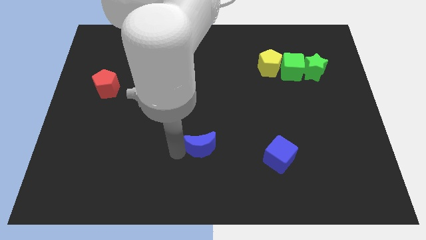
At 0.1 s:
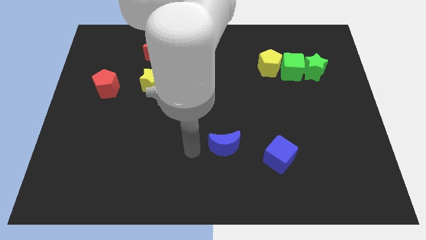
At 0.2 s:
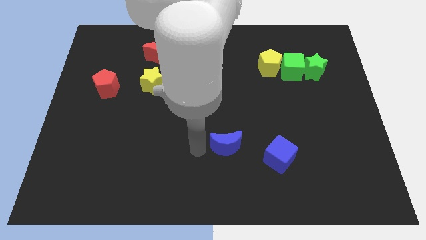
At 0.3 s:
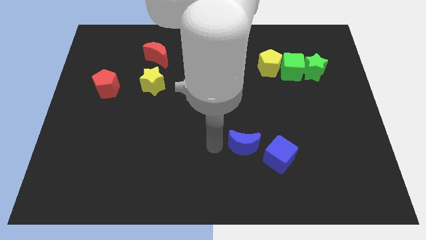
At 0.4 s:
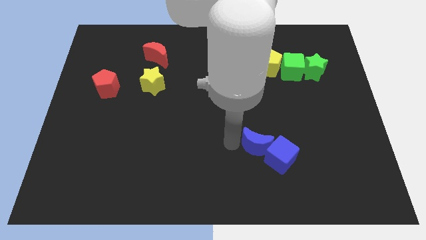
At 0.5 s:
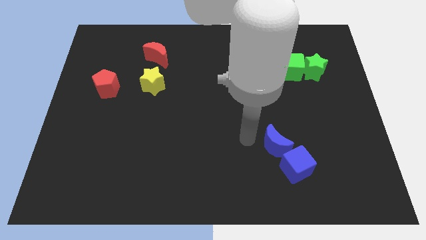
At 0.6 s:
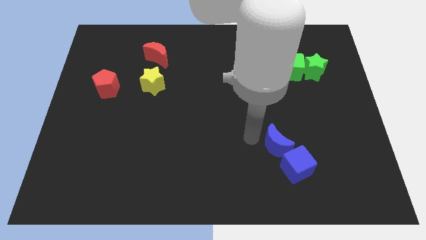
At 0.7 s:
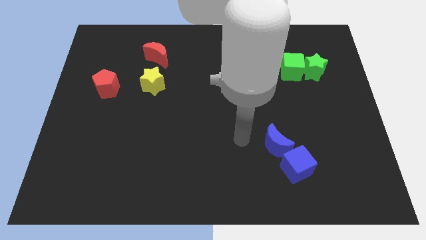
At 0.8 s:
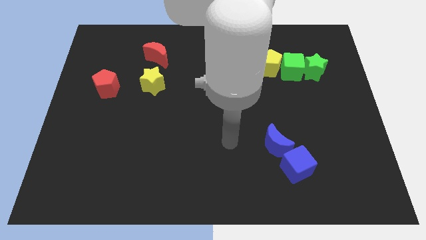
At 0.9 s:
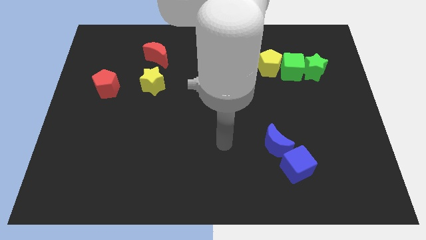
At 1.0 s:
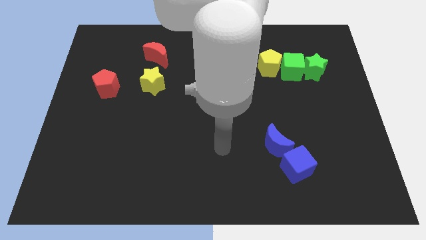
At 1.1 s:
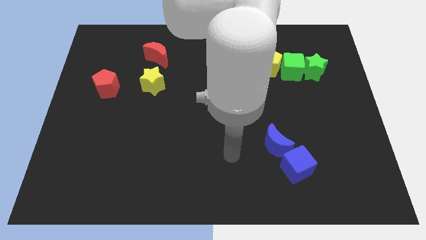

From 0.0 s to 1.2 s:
push the blue crescent into the blue cube

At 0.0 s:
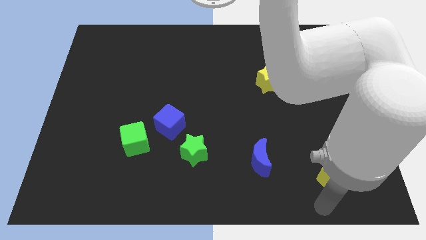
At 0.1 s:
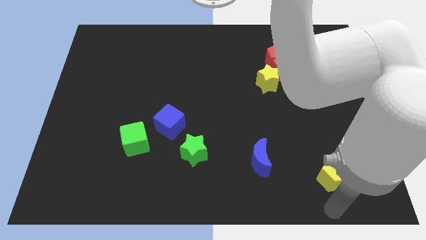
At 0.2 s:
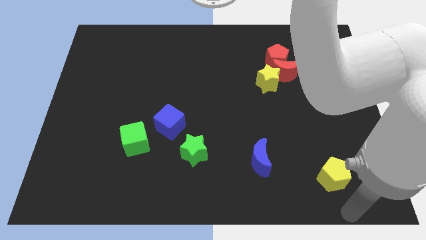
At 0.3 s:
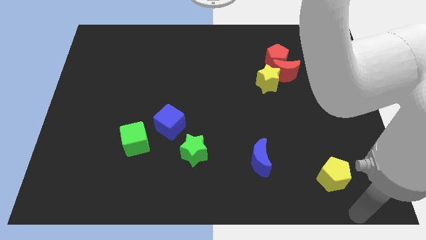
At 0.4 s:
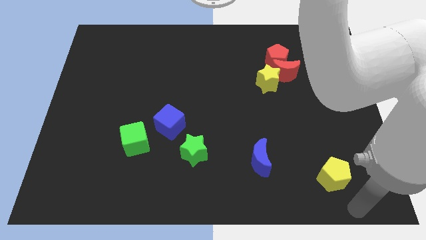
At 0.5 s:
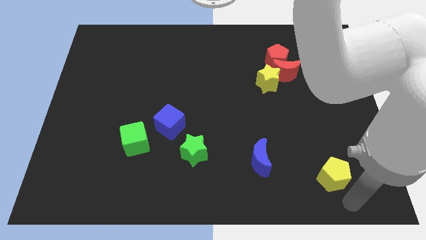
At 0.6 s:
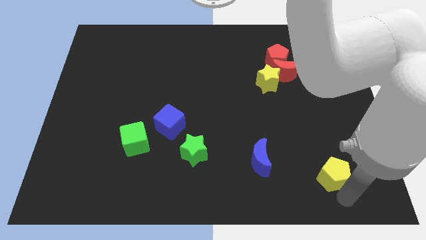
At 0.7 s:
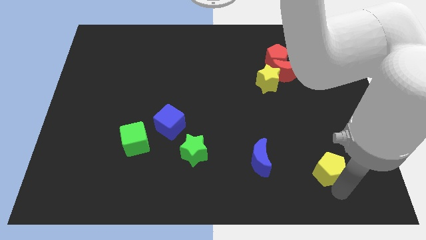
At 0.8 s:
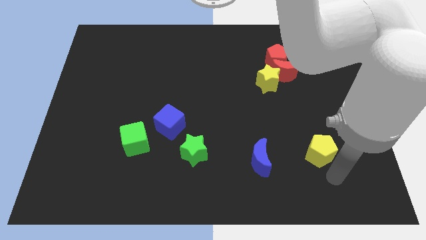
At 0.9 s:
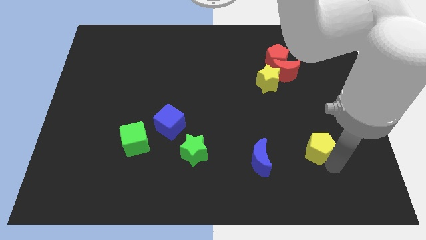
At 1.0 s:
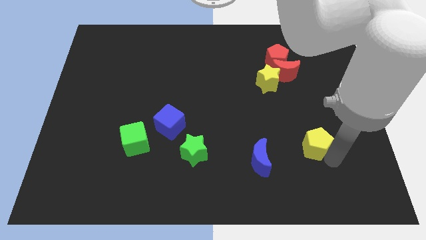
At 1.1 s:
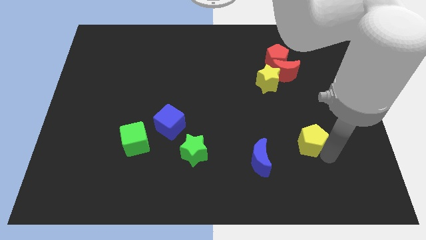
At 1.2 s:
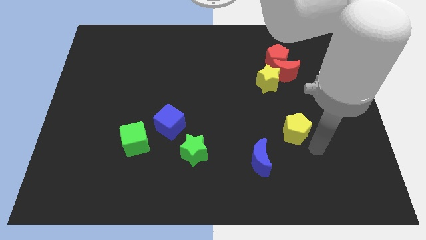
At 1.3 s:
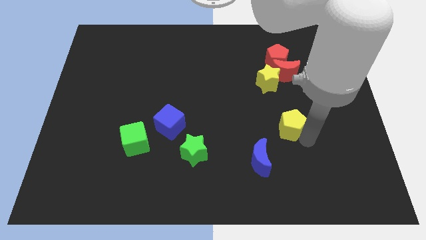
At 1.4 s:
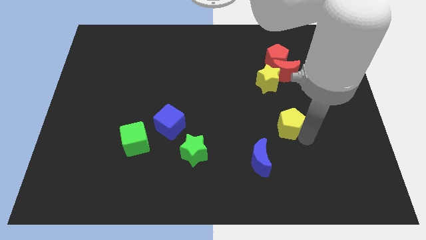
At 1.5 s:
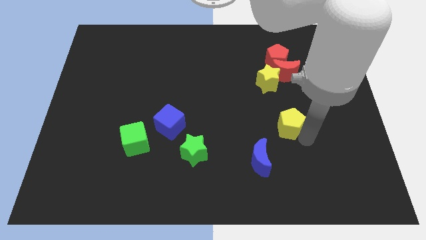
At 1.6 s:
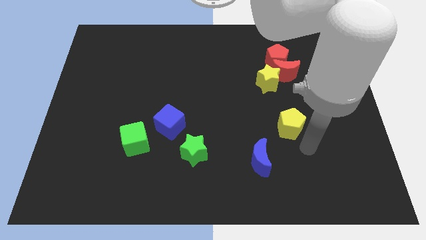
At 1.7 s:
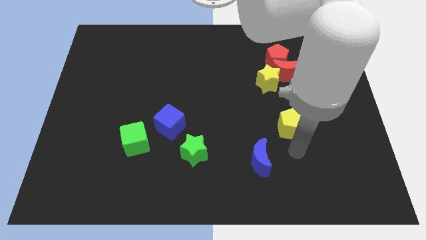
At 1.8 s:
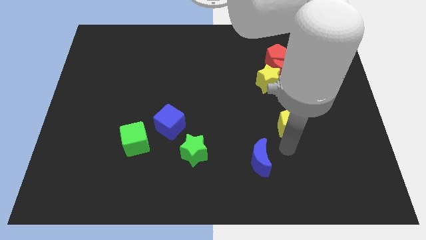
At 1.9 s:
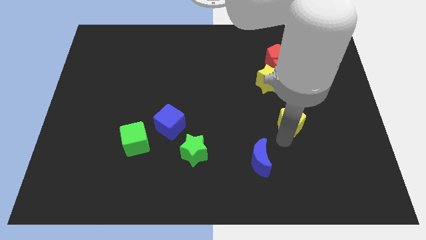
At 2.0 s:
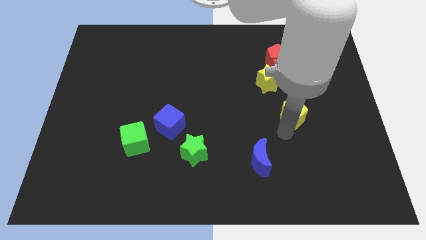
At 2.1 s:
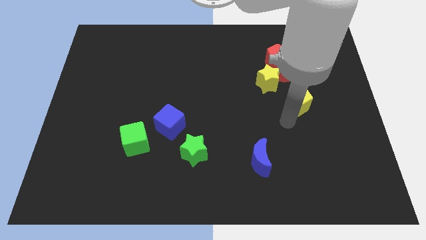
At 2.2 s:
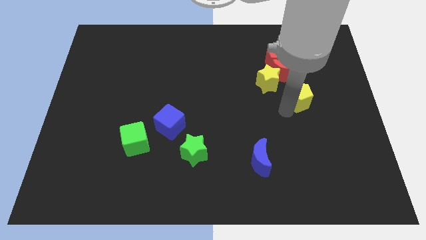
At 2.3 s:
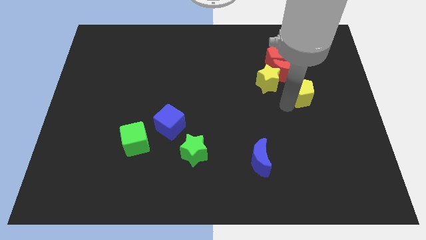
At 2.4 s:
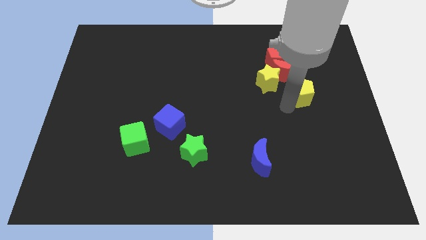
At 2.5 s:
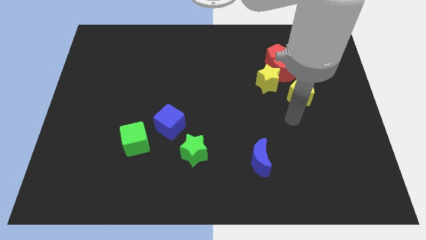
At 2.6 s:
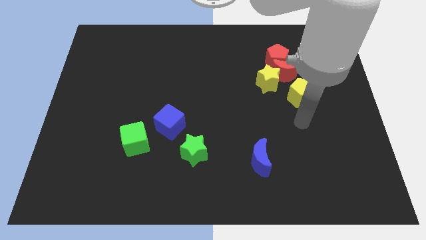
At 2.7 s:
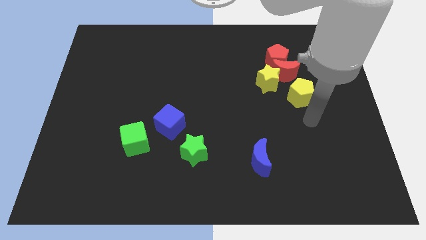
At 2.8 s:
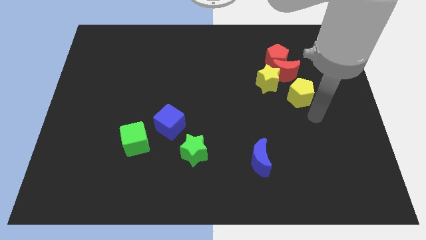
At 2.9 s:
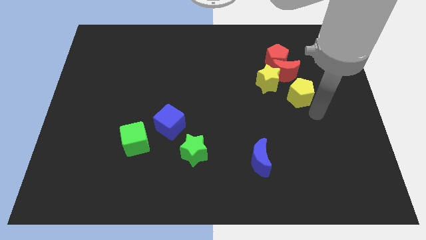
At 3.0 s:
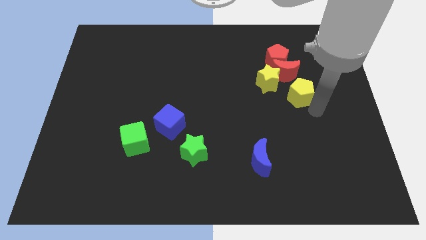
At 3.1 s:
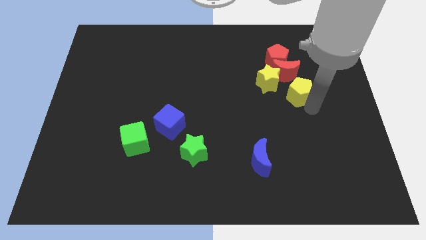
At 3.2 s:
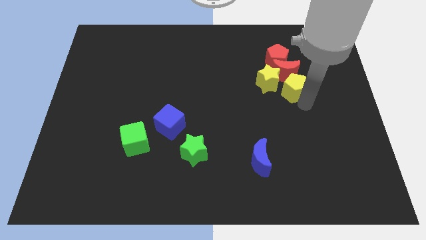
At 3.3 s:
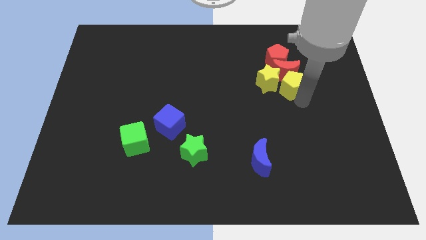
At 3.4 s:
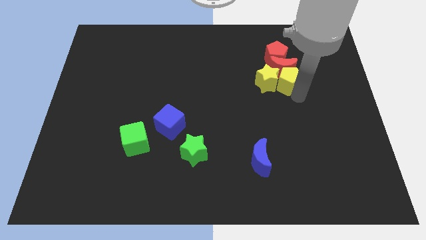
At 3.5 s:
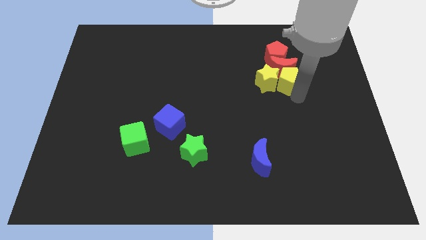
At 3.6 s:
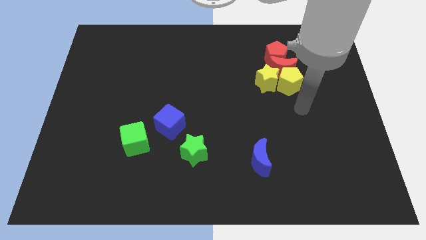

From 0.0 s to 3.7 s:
place the yellow pentagon to the right side of the yellow star

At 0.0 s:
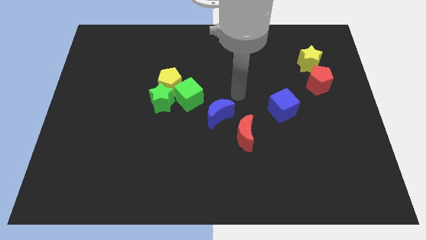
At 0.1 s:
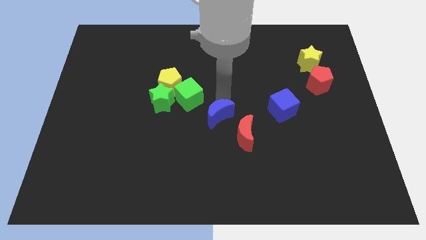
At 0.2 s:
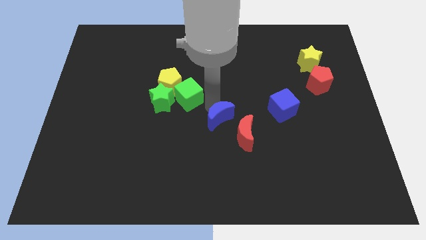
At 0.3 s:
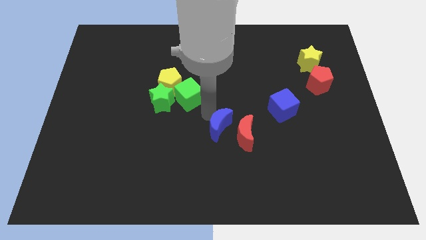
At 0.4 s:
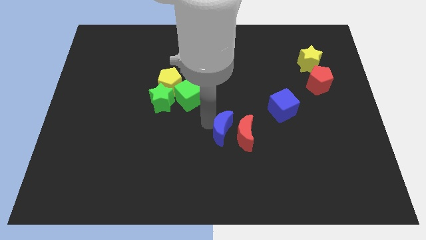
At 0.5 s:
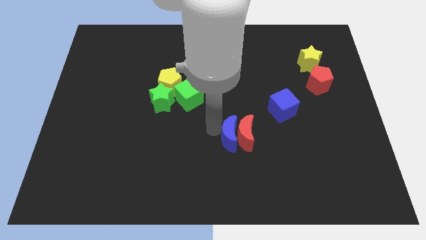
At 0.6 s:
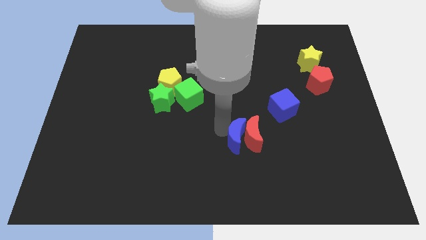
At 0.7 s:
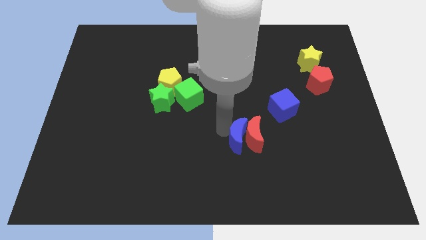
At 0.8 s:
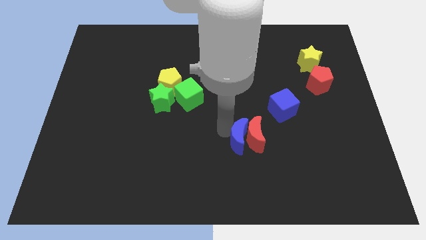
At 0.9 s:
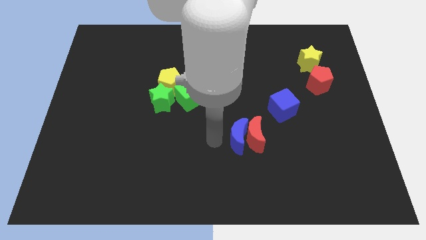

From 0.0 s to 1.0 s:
move the blue moon left to the red moon

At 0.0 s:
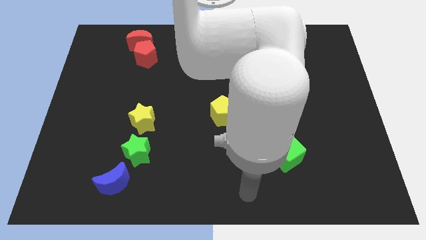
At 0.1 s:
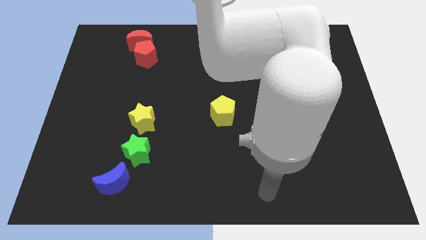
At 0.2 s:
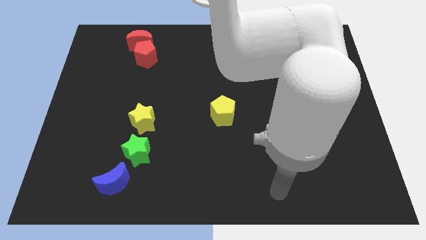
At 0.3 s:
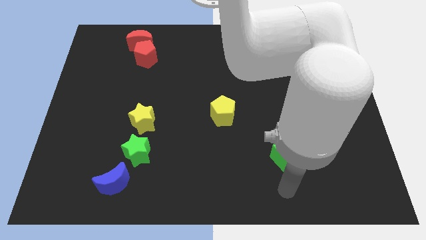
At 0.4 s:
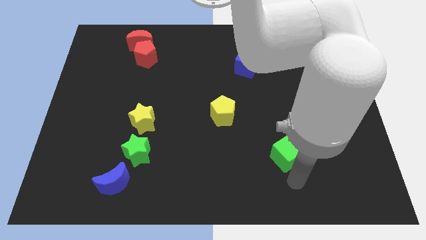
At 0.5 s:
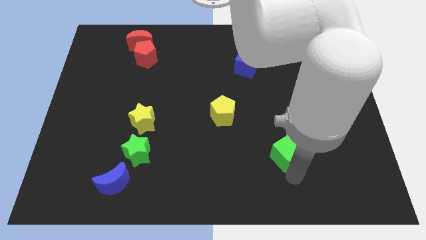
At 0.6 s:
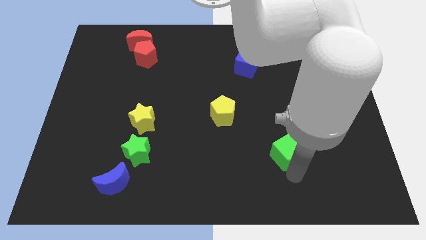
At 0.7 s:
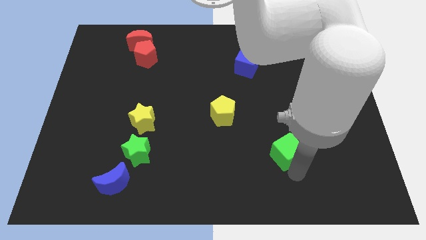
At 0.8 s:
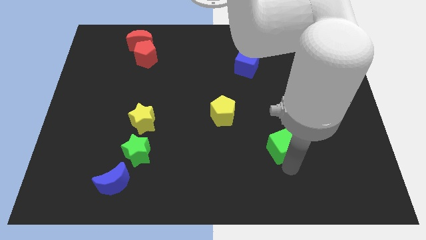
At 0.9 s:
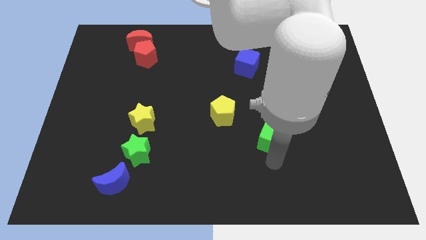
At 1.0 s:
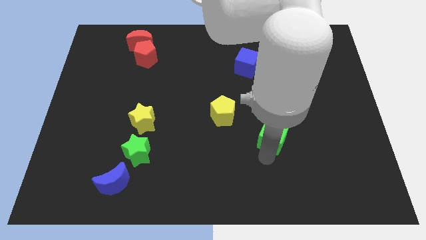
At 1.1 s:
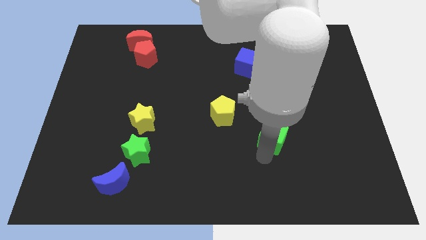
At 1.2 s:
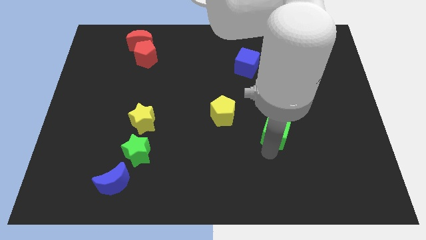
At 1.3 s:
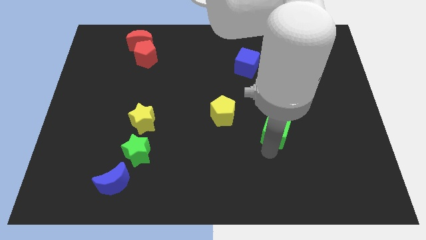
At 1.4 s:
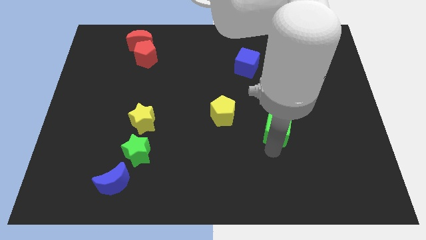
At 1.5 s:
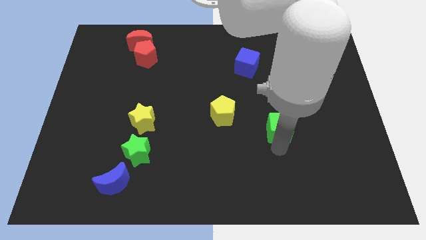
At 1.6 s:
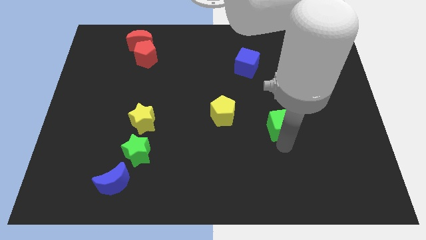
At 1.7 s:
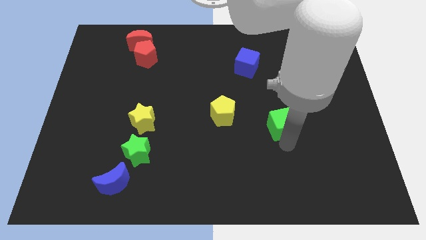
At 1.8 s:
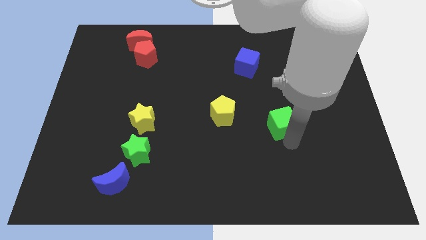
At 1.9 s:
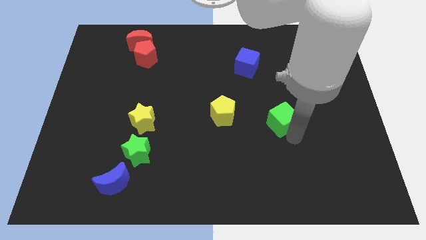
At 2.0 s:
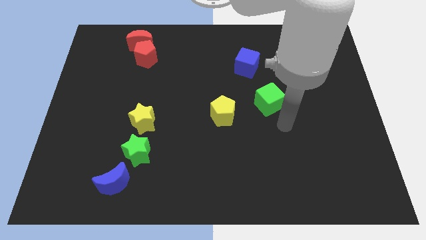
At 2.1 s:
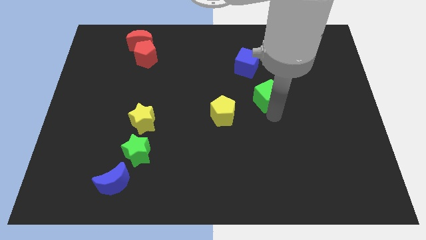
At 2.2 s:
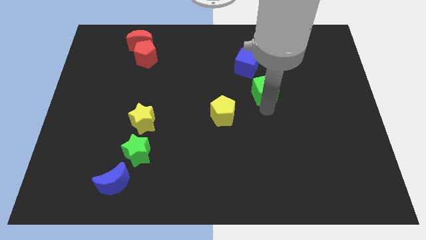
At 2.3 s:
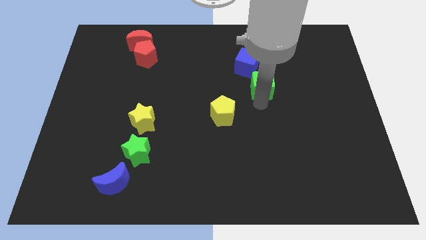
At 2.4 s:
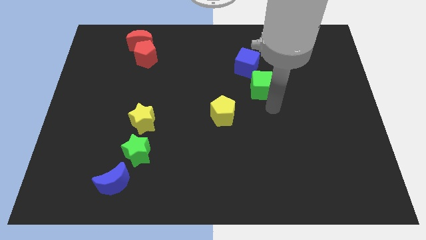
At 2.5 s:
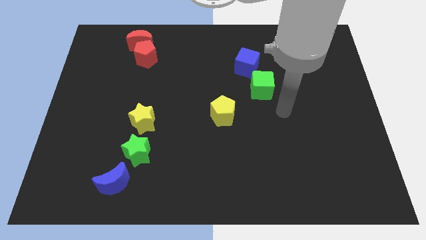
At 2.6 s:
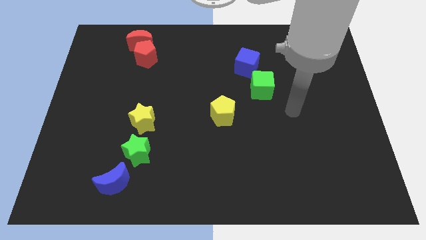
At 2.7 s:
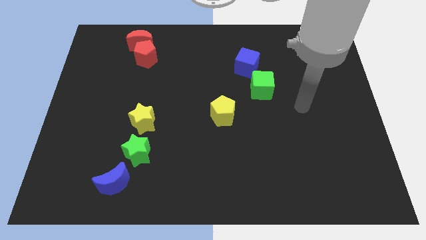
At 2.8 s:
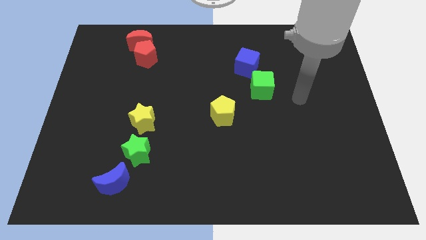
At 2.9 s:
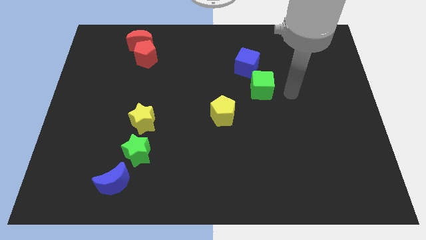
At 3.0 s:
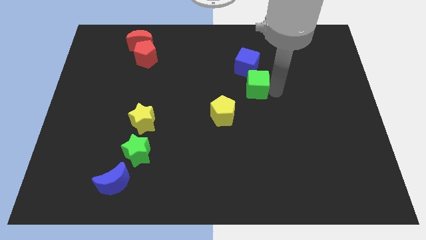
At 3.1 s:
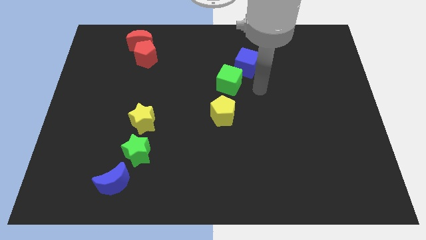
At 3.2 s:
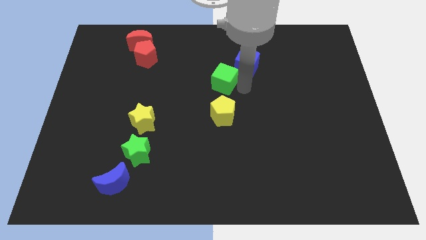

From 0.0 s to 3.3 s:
move the green cube to the top of the yellow pentagon
